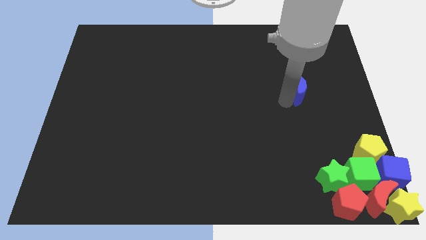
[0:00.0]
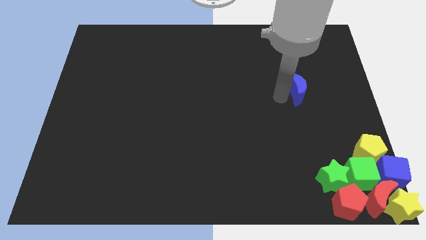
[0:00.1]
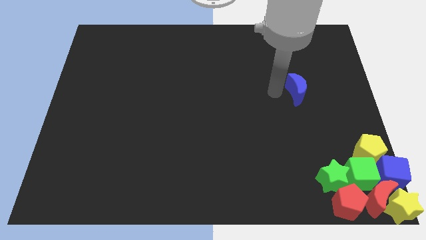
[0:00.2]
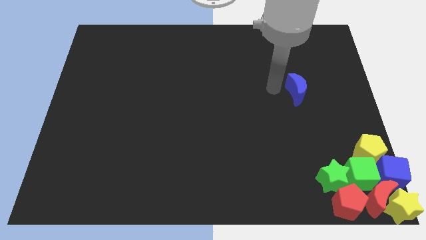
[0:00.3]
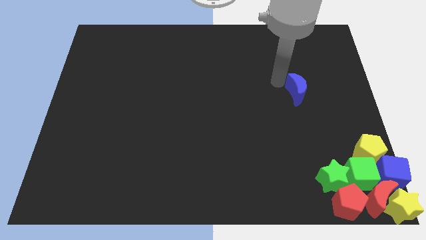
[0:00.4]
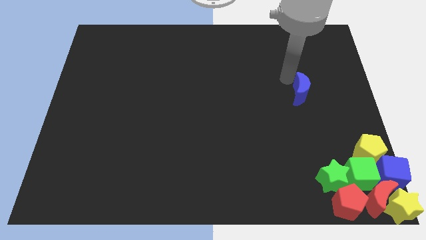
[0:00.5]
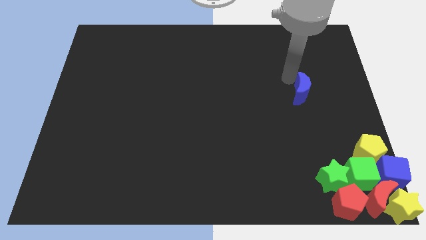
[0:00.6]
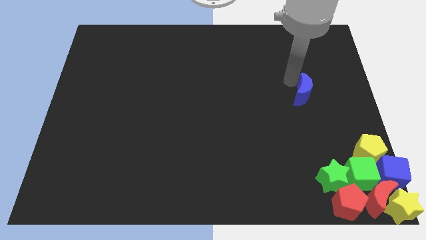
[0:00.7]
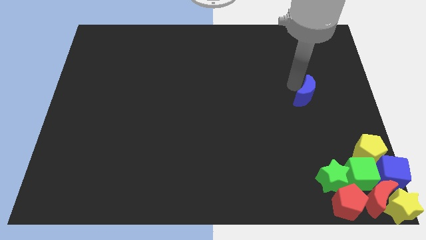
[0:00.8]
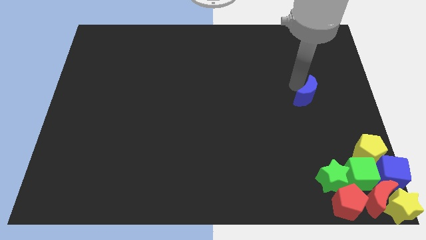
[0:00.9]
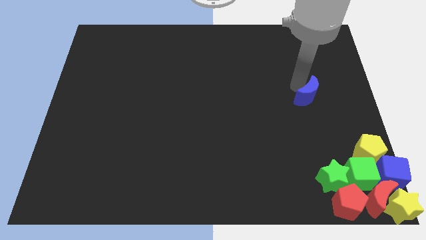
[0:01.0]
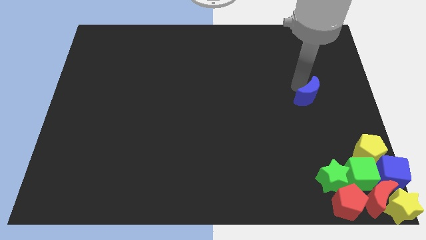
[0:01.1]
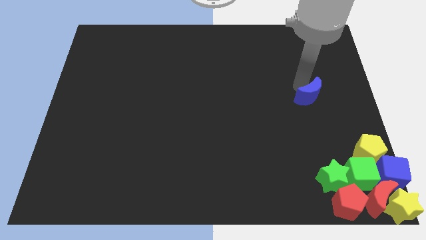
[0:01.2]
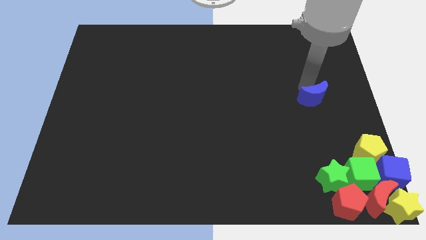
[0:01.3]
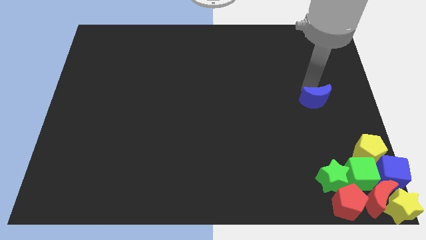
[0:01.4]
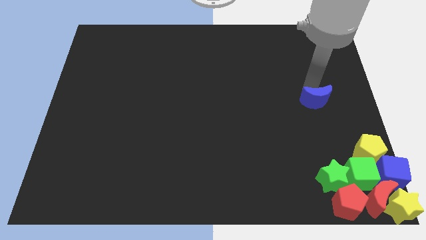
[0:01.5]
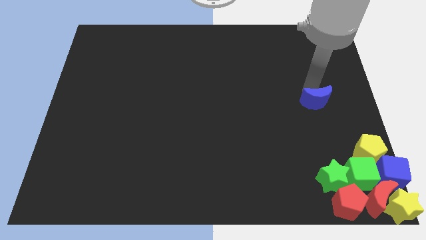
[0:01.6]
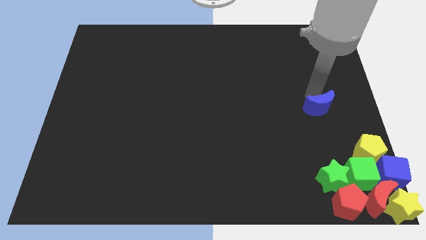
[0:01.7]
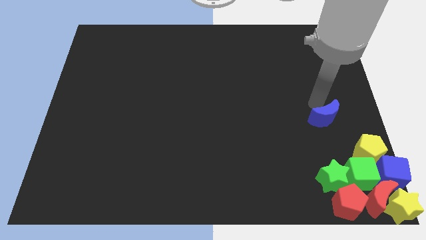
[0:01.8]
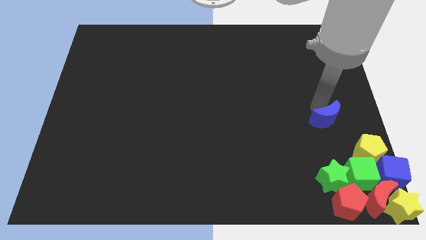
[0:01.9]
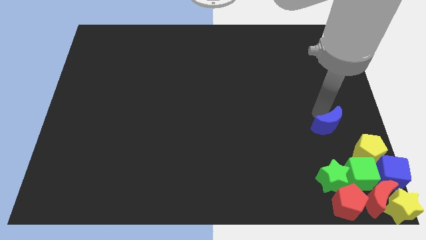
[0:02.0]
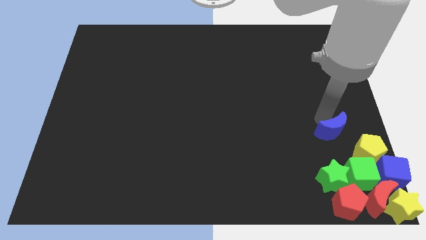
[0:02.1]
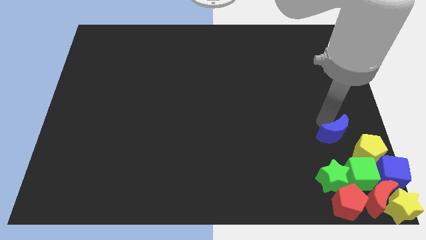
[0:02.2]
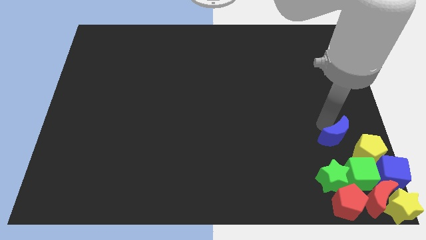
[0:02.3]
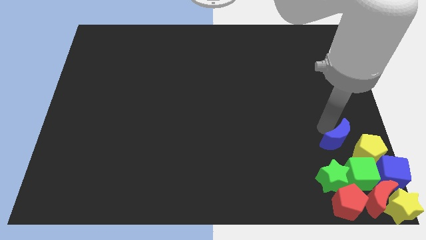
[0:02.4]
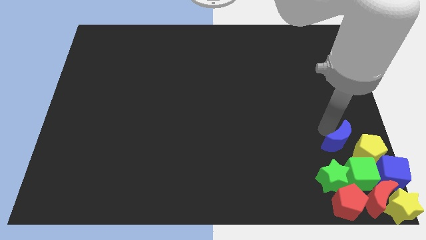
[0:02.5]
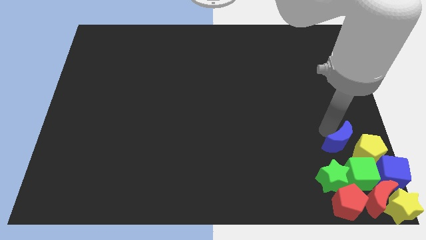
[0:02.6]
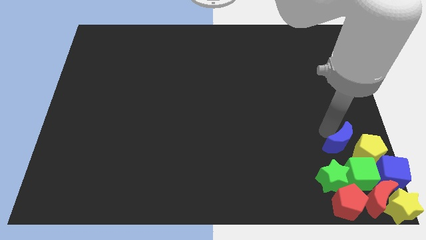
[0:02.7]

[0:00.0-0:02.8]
push blue crescent above green cube

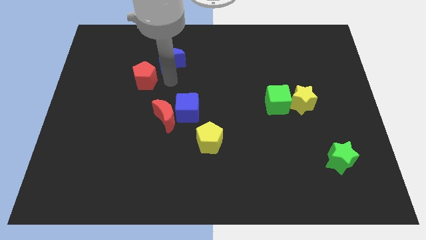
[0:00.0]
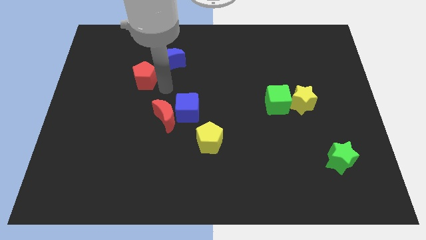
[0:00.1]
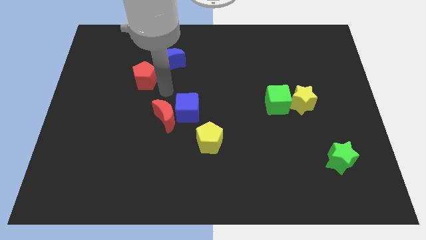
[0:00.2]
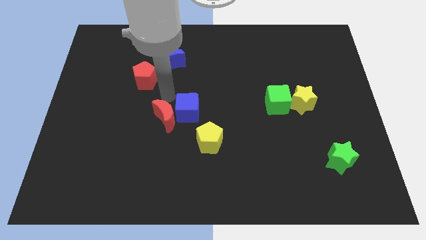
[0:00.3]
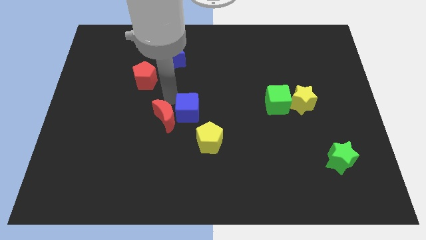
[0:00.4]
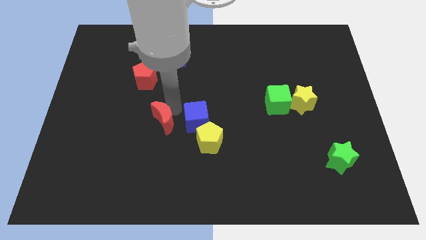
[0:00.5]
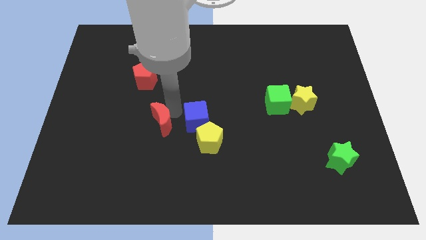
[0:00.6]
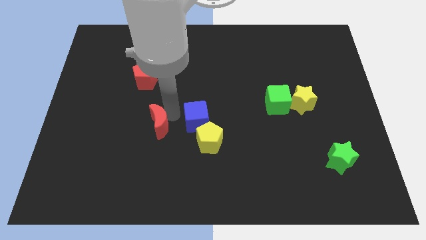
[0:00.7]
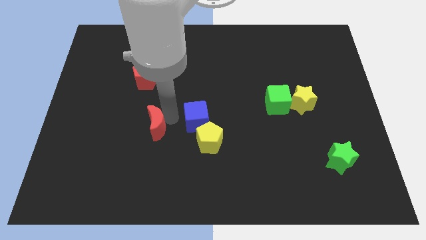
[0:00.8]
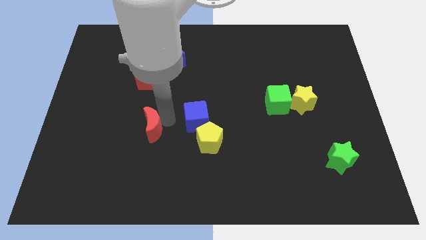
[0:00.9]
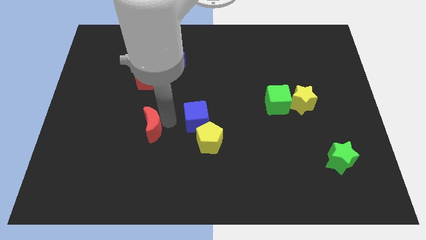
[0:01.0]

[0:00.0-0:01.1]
push the red crescent diagonally to the bottom right side of the red pentagon

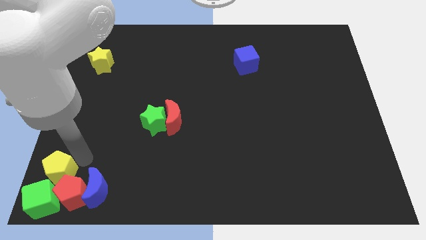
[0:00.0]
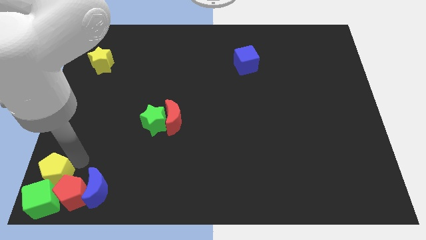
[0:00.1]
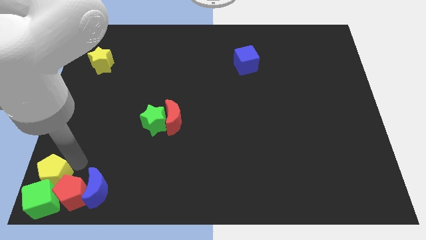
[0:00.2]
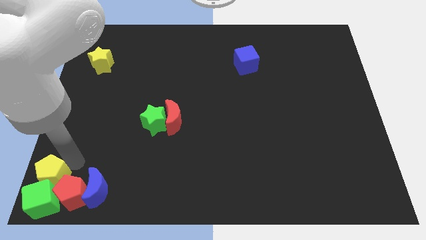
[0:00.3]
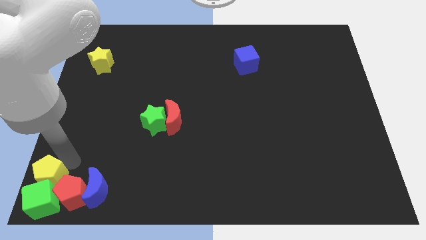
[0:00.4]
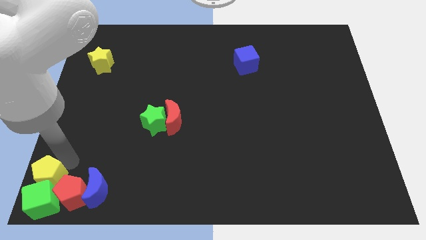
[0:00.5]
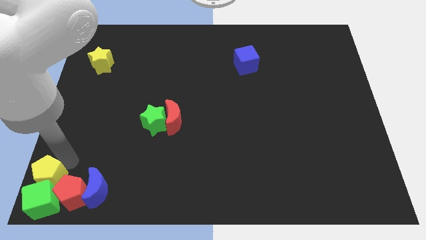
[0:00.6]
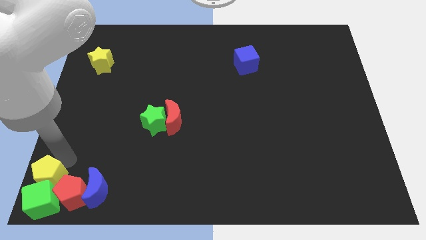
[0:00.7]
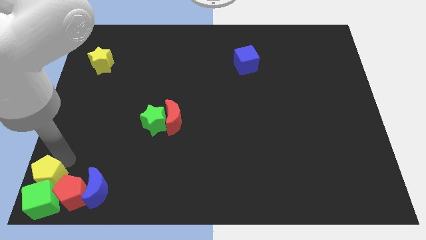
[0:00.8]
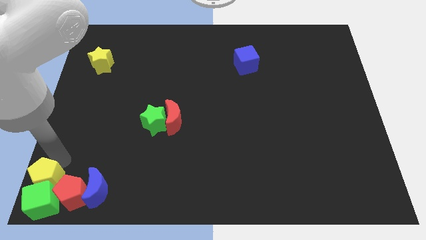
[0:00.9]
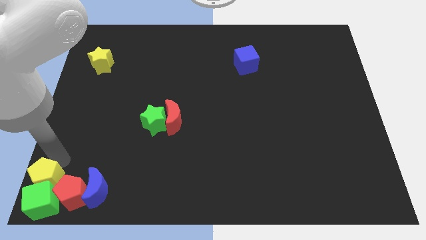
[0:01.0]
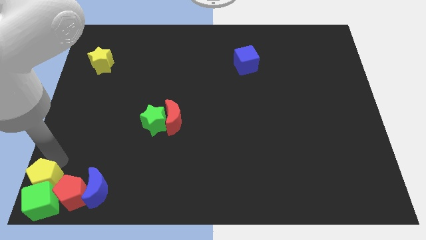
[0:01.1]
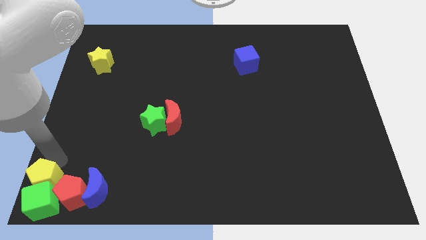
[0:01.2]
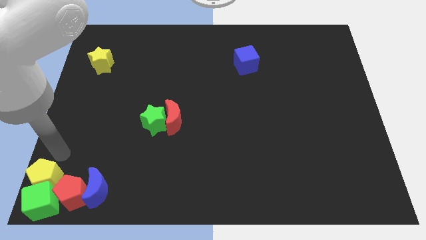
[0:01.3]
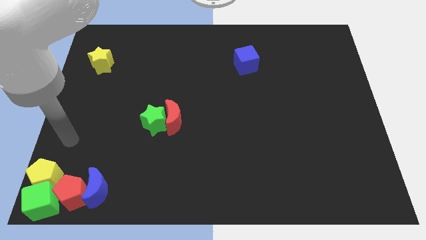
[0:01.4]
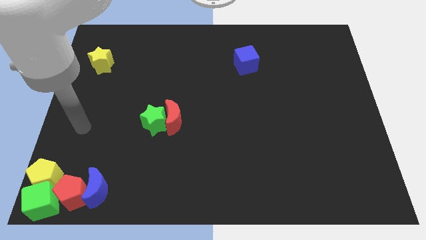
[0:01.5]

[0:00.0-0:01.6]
push yellow pentagon above green cube

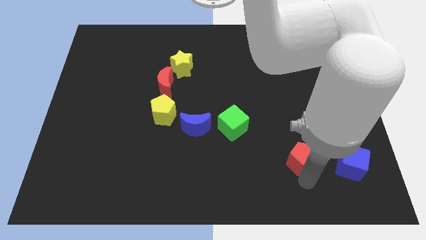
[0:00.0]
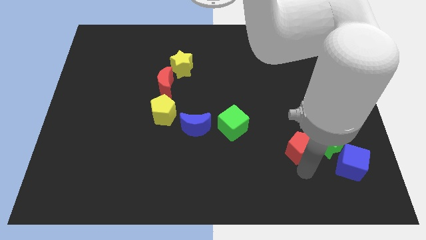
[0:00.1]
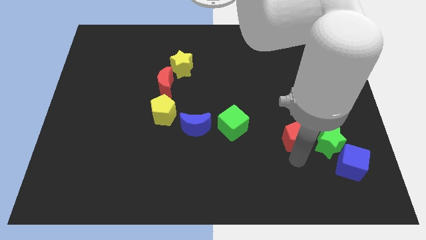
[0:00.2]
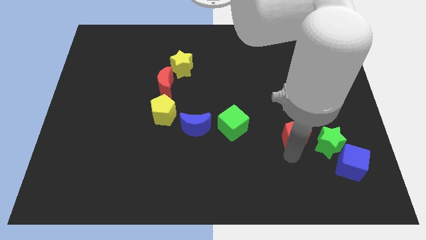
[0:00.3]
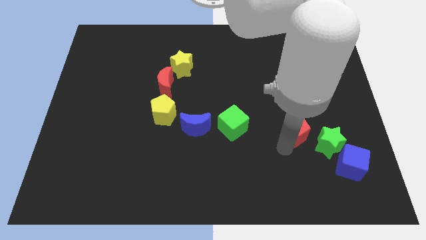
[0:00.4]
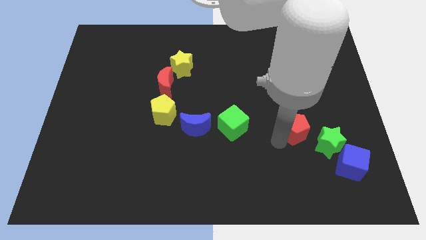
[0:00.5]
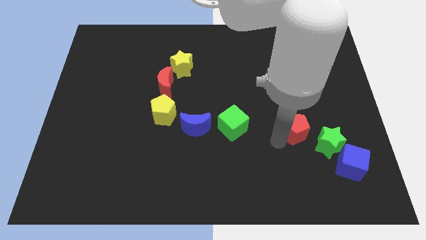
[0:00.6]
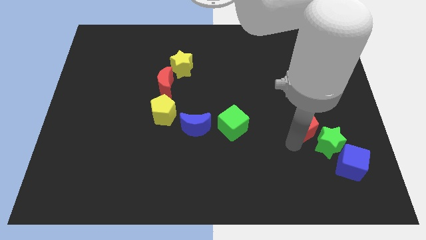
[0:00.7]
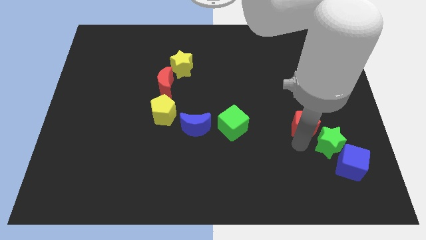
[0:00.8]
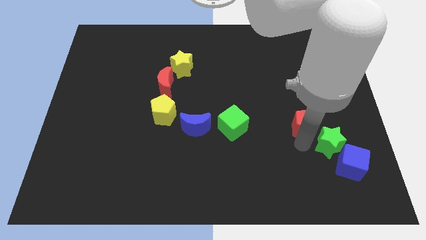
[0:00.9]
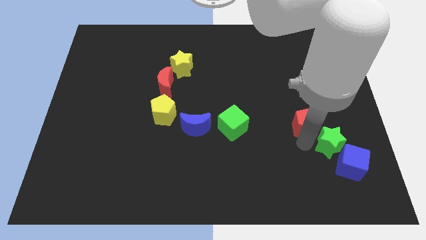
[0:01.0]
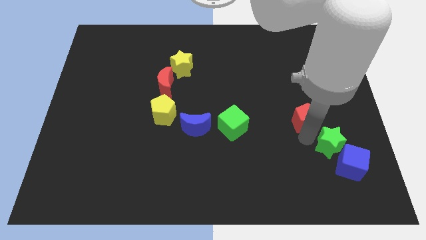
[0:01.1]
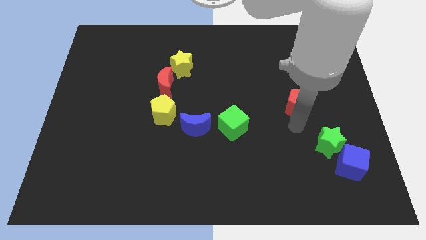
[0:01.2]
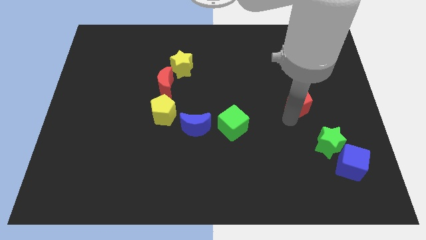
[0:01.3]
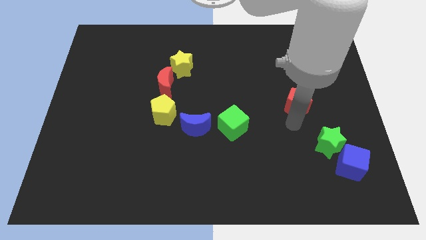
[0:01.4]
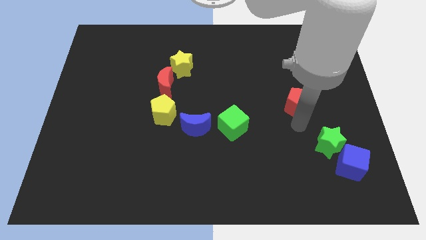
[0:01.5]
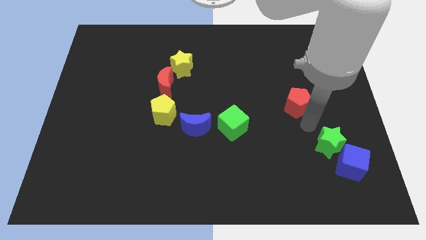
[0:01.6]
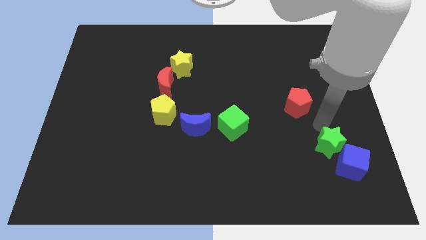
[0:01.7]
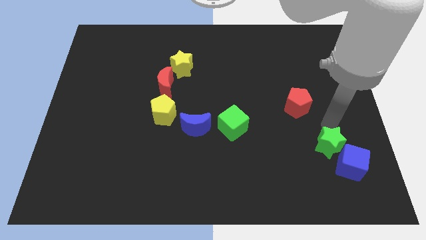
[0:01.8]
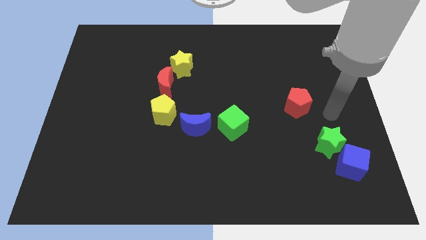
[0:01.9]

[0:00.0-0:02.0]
place the red pentagon right to the green cube

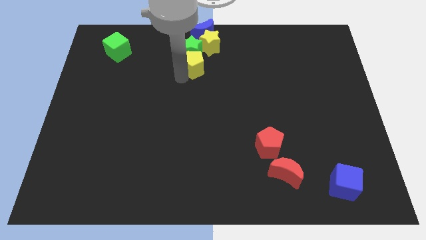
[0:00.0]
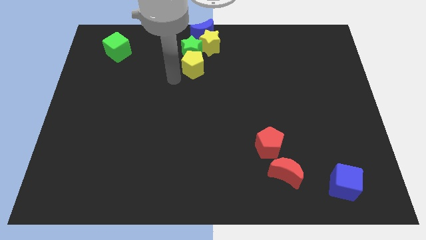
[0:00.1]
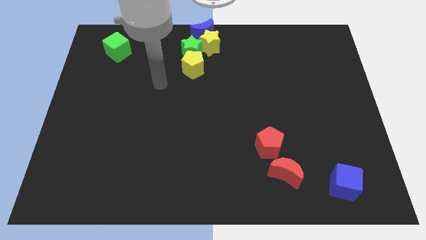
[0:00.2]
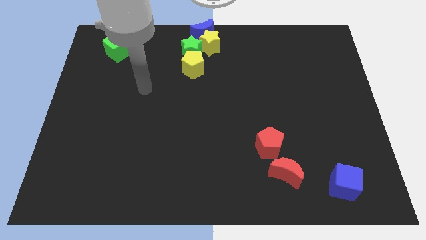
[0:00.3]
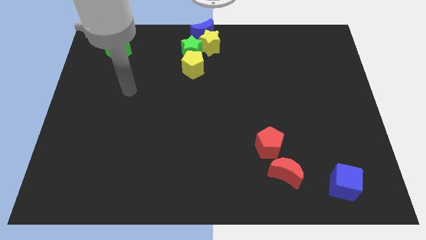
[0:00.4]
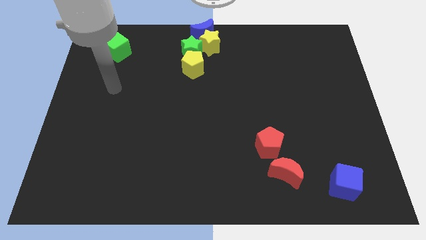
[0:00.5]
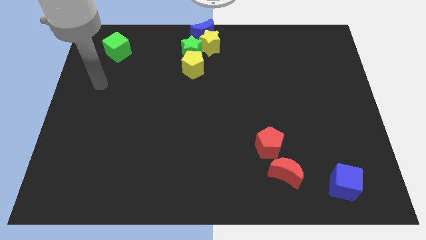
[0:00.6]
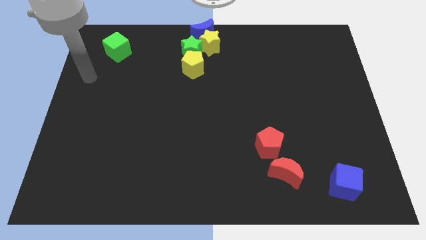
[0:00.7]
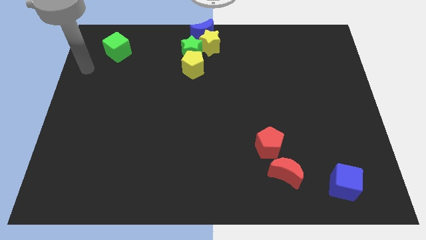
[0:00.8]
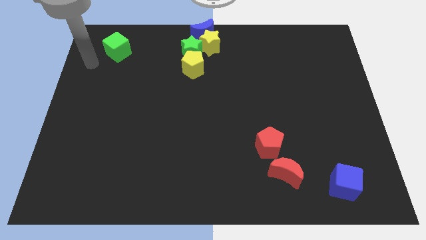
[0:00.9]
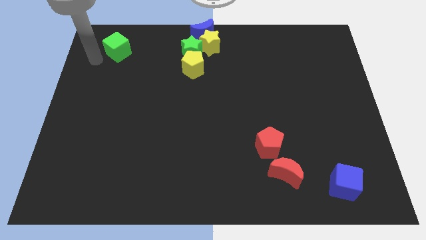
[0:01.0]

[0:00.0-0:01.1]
move away from the yellow pentagon

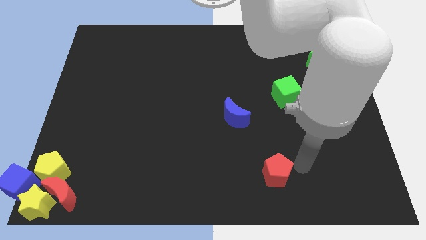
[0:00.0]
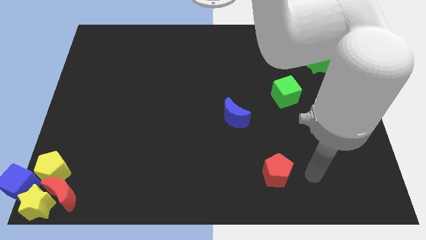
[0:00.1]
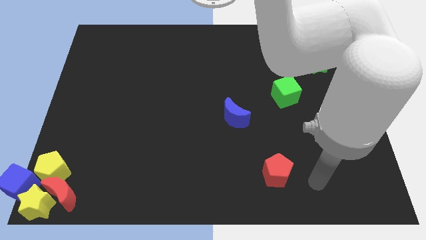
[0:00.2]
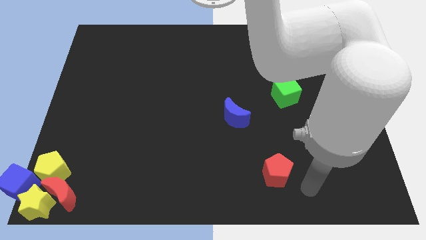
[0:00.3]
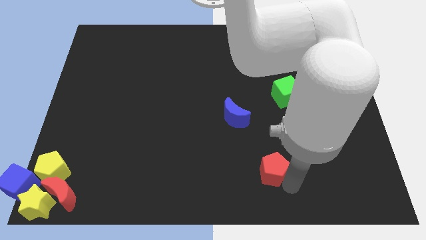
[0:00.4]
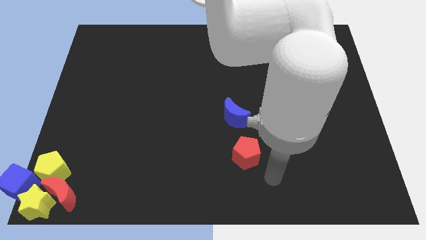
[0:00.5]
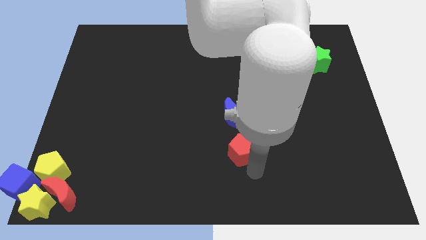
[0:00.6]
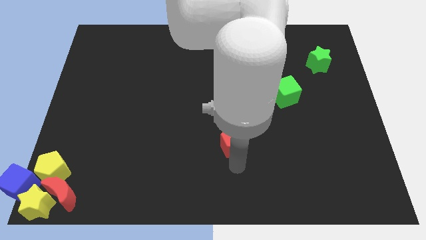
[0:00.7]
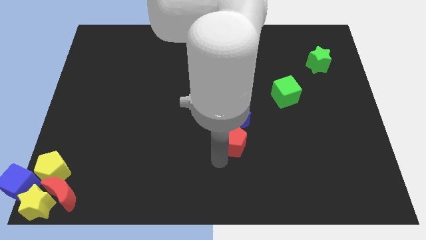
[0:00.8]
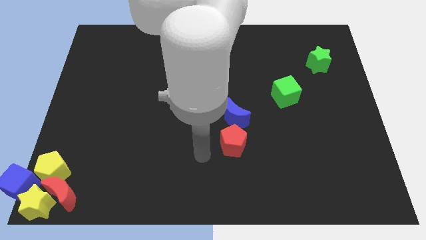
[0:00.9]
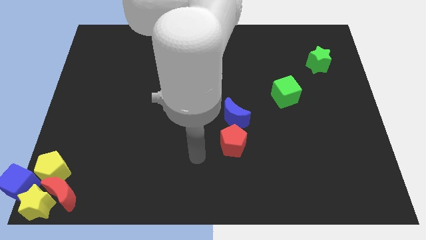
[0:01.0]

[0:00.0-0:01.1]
move red pentagon at the bottom of blue crescent
